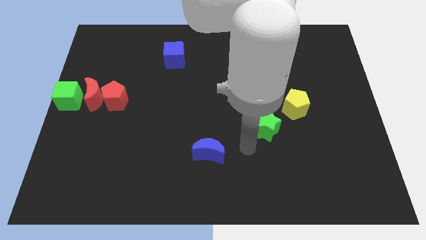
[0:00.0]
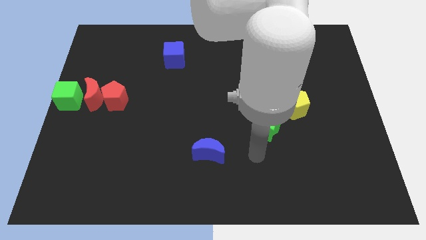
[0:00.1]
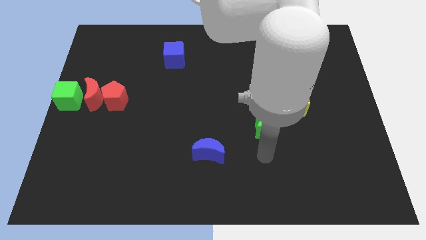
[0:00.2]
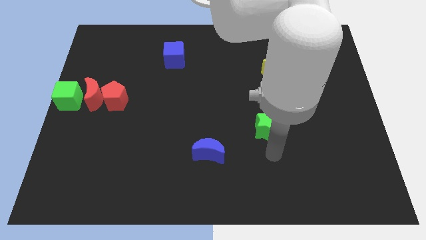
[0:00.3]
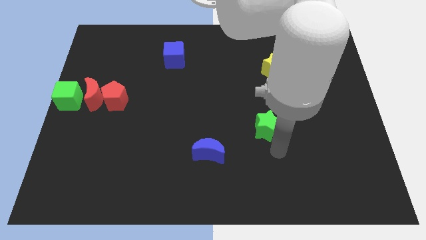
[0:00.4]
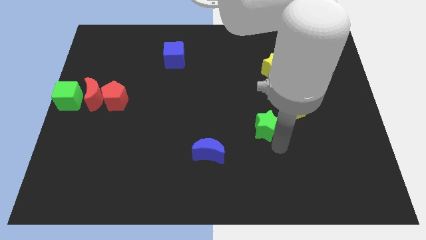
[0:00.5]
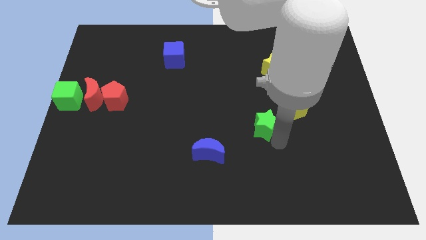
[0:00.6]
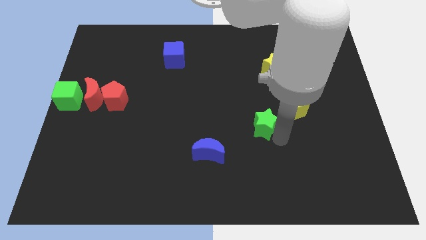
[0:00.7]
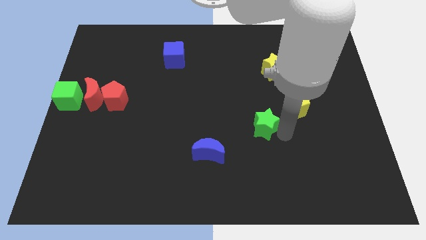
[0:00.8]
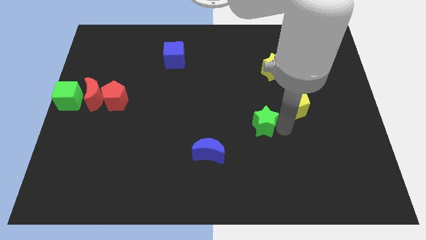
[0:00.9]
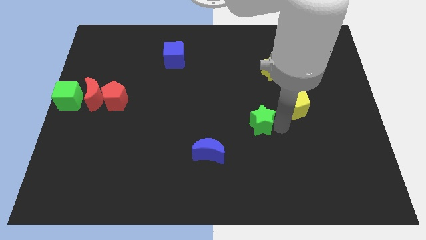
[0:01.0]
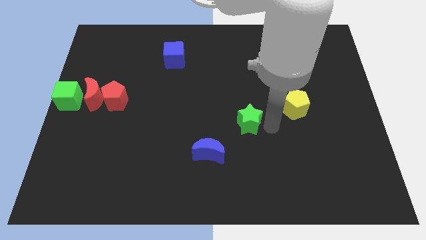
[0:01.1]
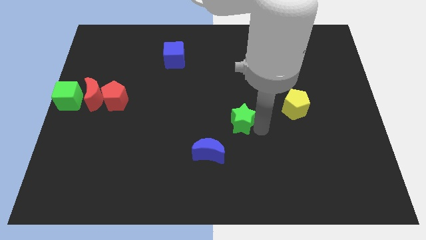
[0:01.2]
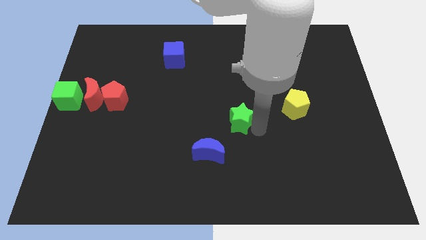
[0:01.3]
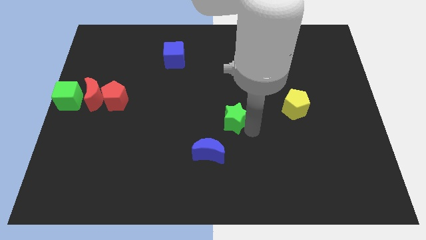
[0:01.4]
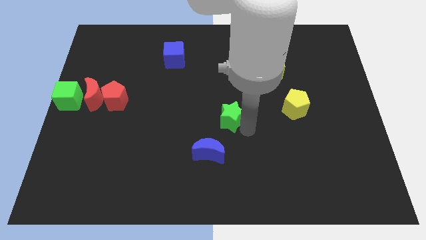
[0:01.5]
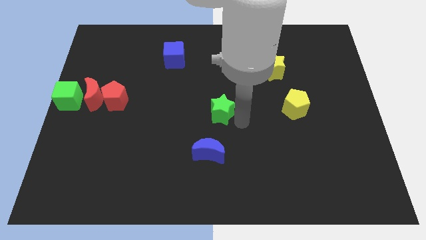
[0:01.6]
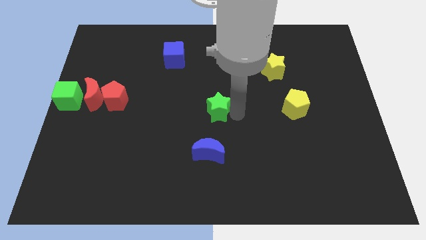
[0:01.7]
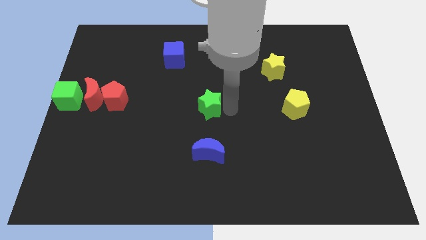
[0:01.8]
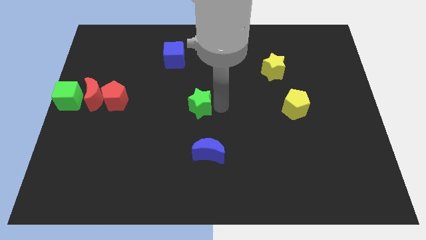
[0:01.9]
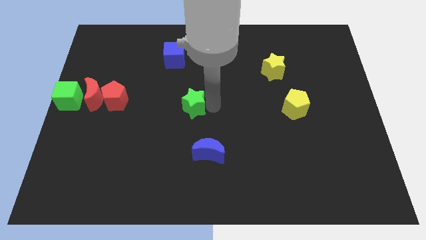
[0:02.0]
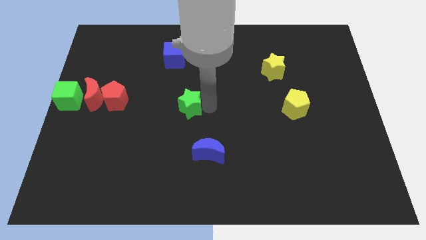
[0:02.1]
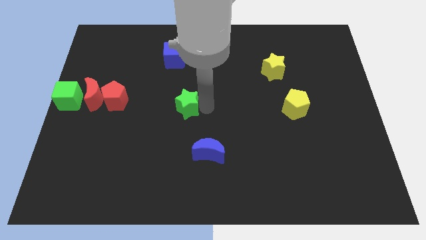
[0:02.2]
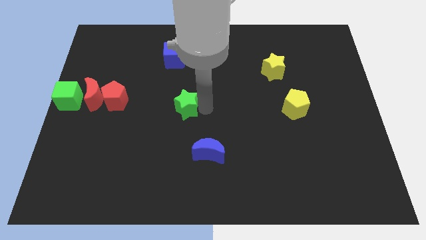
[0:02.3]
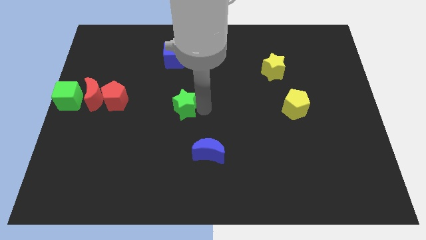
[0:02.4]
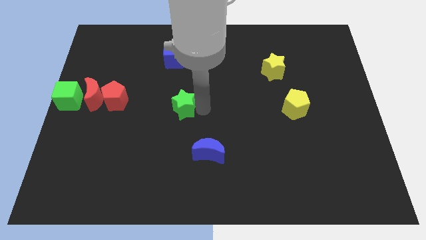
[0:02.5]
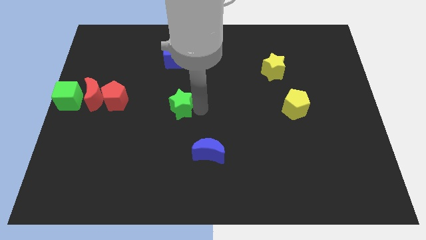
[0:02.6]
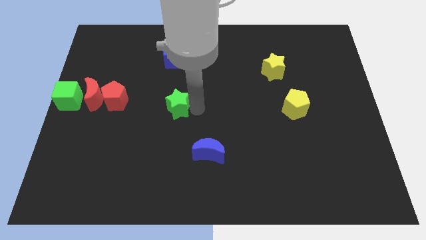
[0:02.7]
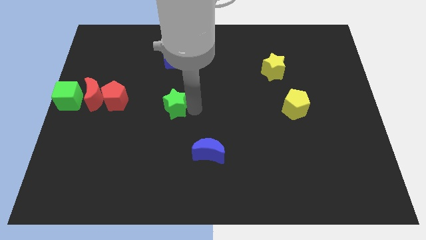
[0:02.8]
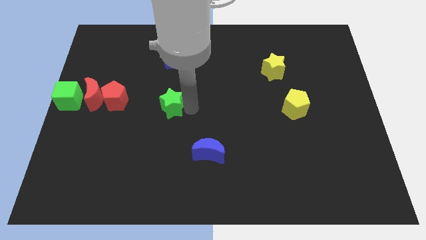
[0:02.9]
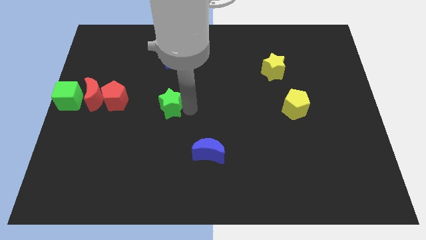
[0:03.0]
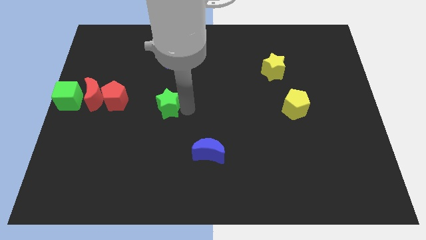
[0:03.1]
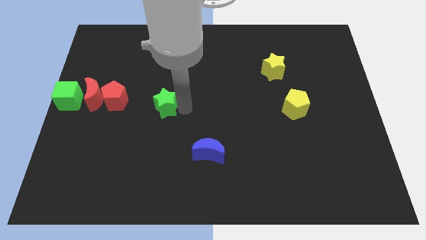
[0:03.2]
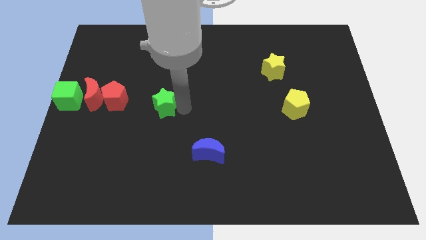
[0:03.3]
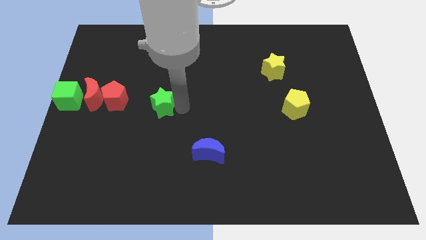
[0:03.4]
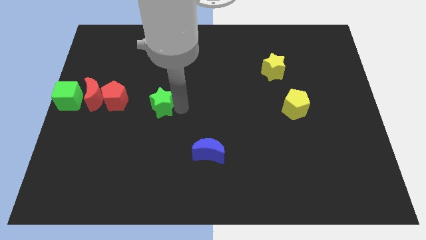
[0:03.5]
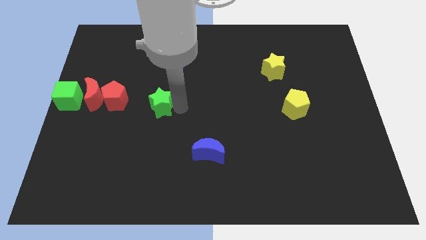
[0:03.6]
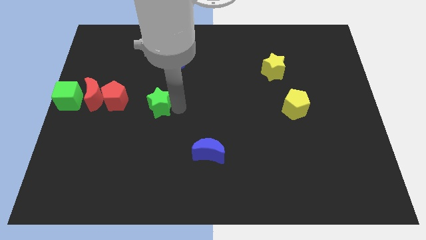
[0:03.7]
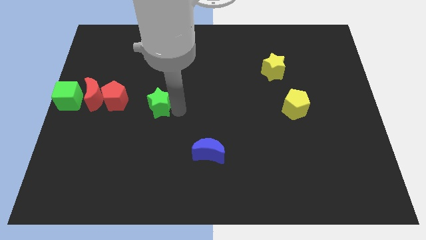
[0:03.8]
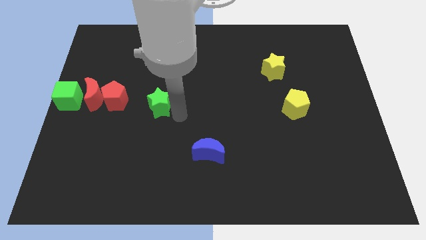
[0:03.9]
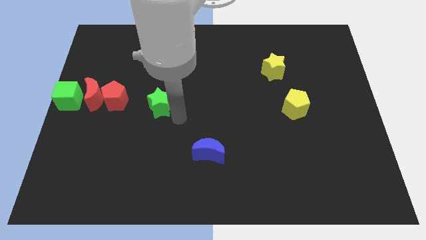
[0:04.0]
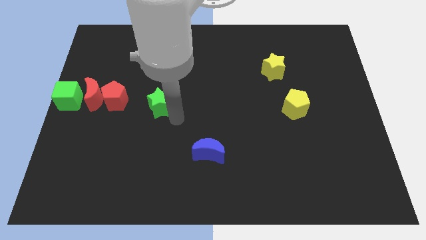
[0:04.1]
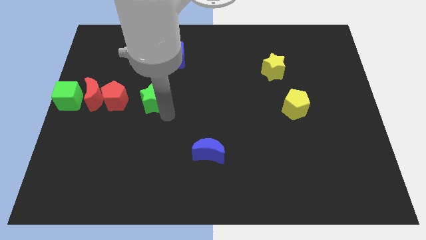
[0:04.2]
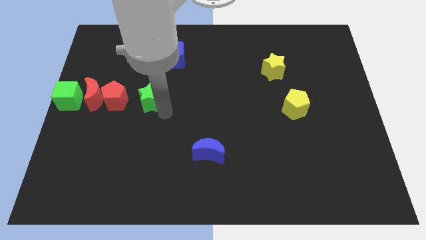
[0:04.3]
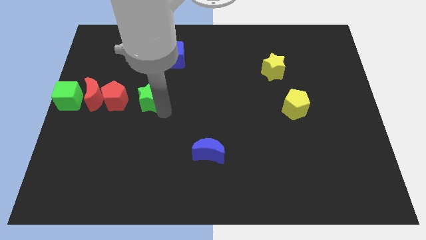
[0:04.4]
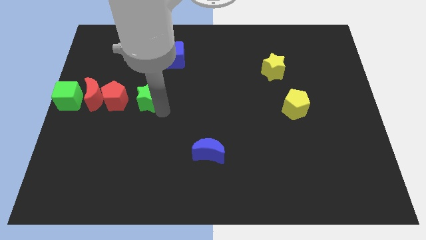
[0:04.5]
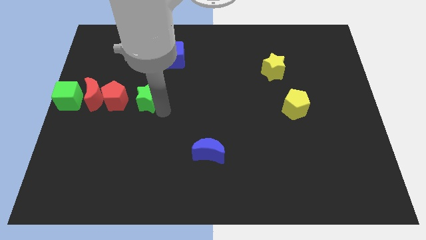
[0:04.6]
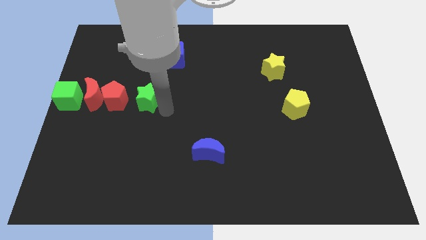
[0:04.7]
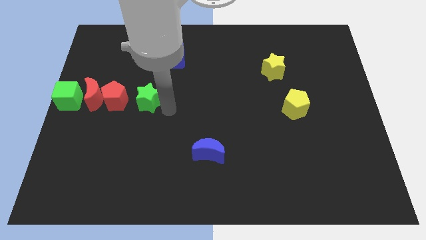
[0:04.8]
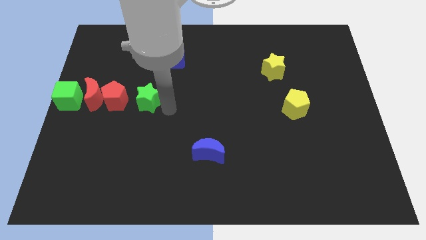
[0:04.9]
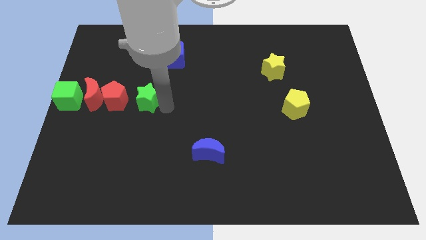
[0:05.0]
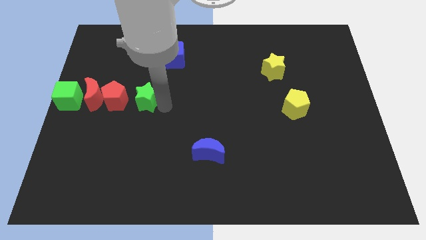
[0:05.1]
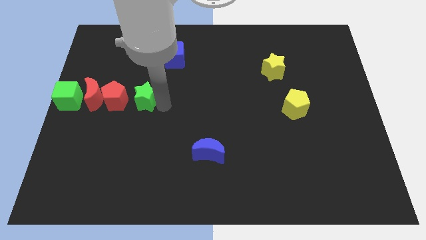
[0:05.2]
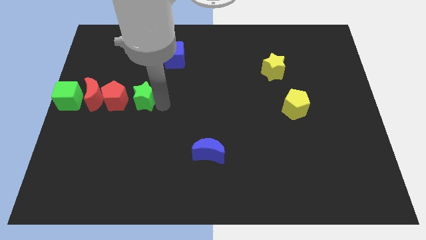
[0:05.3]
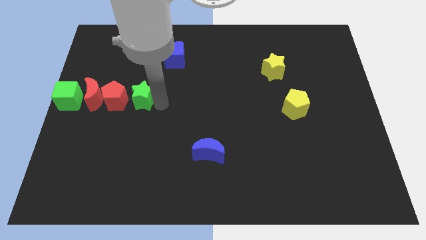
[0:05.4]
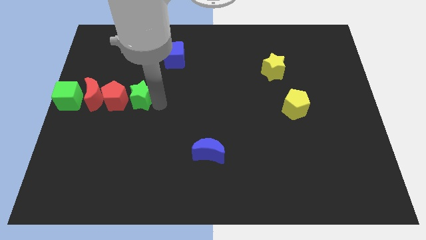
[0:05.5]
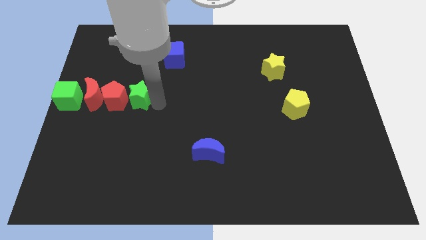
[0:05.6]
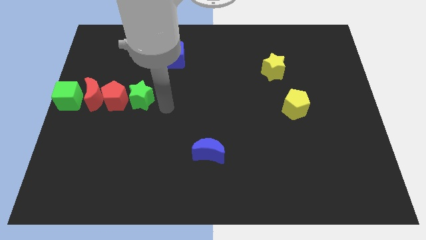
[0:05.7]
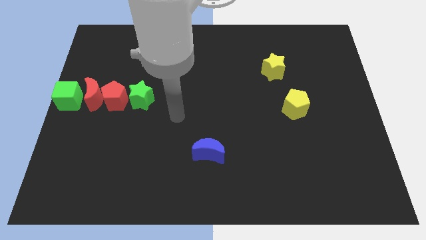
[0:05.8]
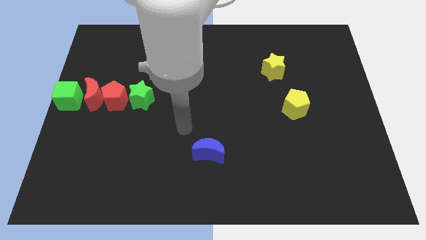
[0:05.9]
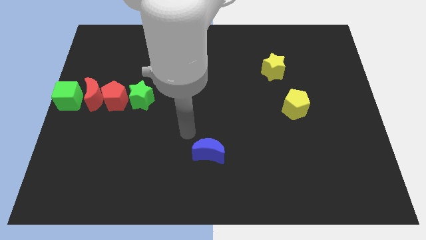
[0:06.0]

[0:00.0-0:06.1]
move the green star right beside the red pentagon

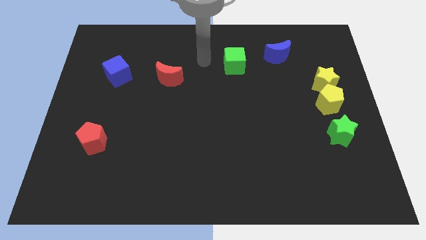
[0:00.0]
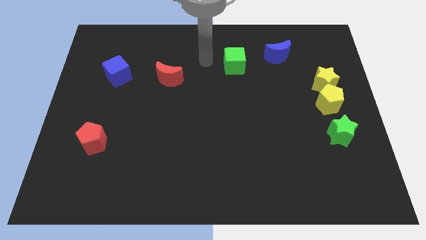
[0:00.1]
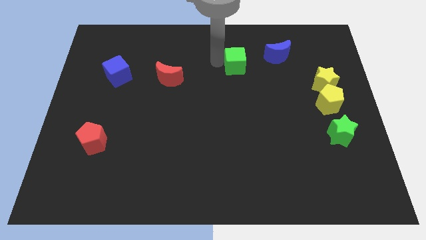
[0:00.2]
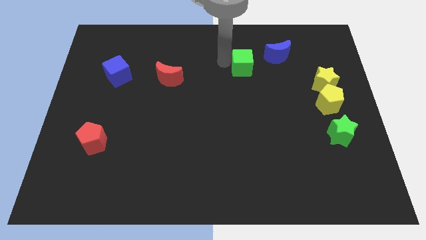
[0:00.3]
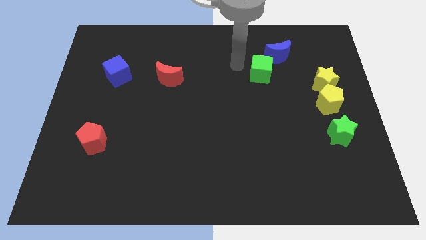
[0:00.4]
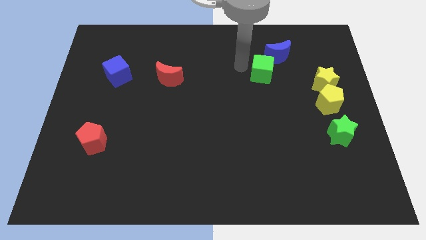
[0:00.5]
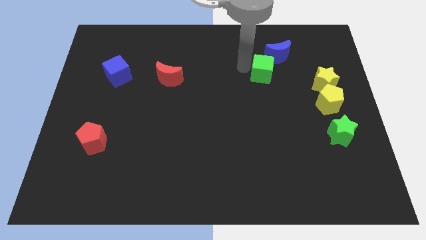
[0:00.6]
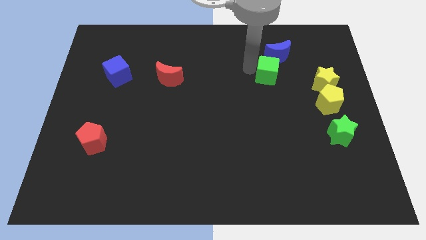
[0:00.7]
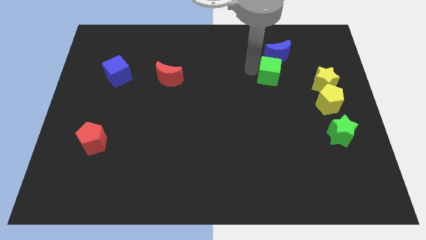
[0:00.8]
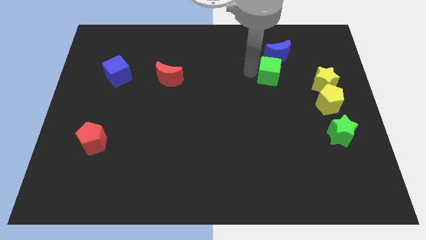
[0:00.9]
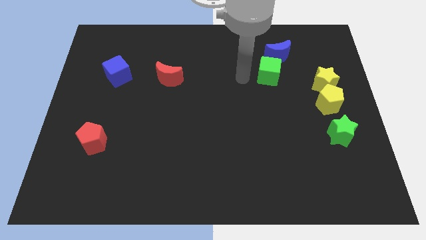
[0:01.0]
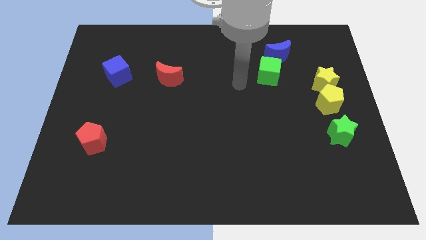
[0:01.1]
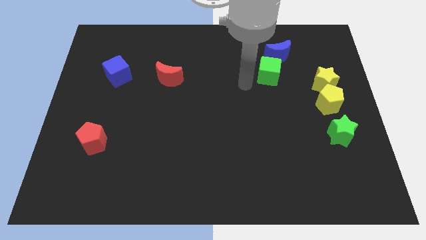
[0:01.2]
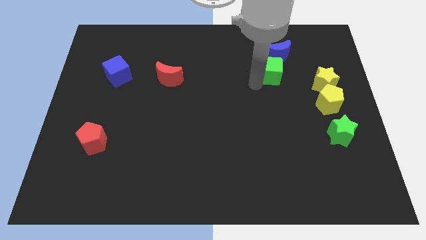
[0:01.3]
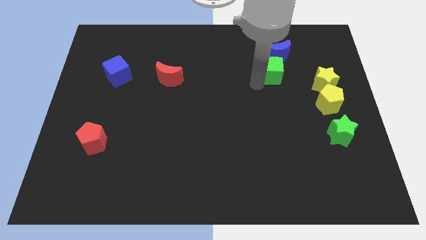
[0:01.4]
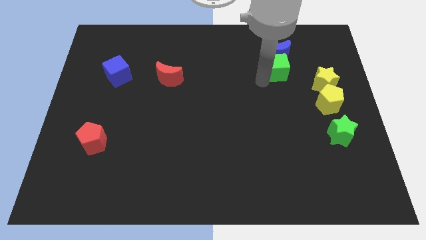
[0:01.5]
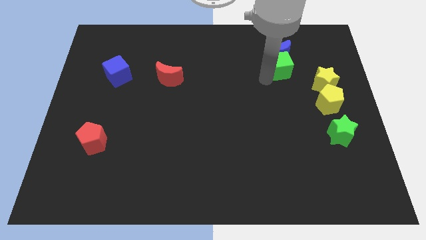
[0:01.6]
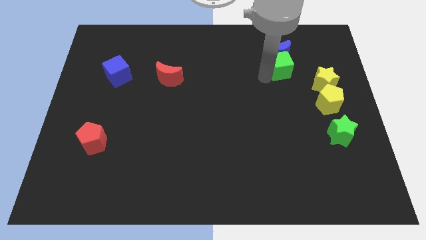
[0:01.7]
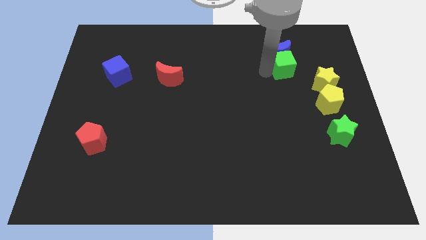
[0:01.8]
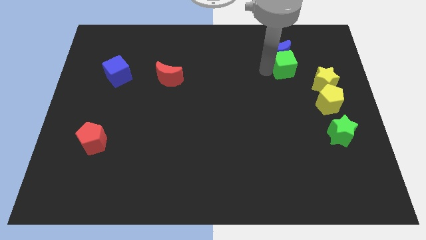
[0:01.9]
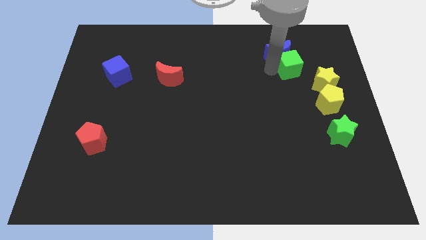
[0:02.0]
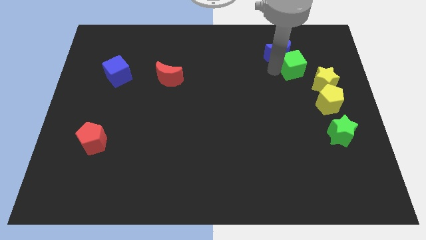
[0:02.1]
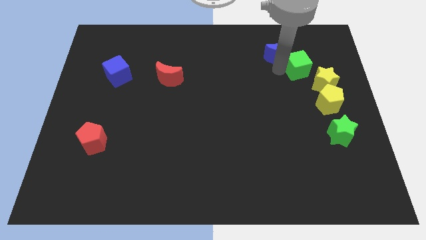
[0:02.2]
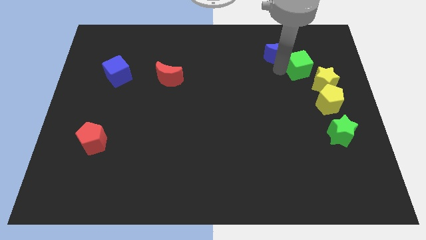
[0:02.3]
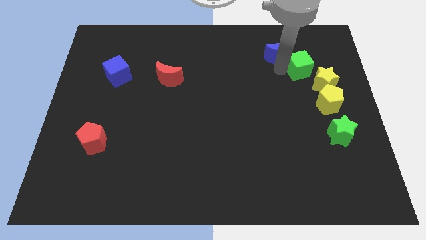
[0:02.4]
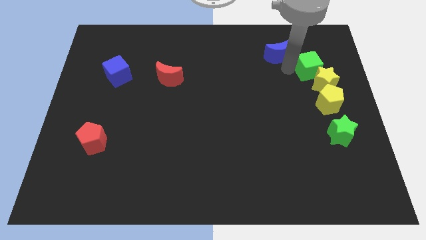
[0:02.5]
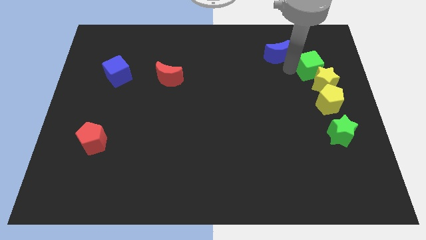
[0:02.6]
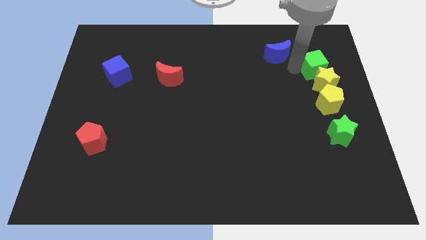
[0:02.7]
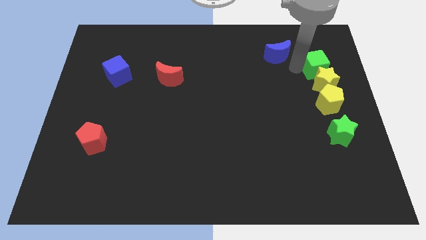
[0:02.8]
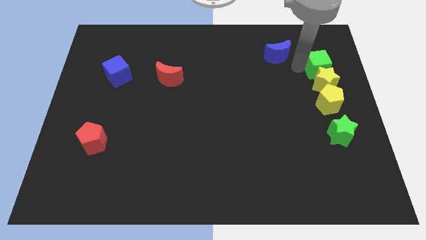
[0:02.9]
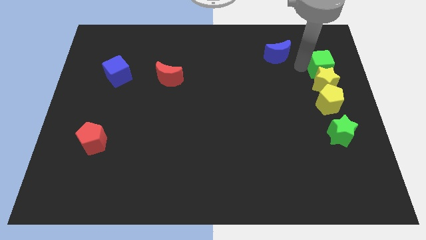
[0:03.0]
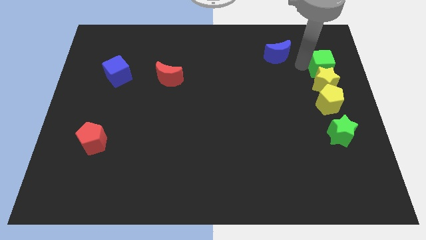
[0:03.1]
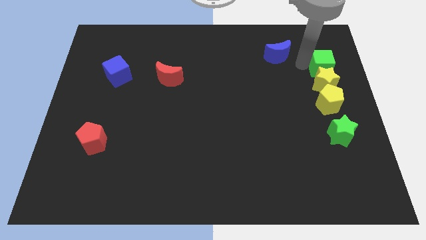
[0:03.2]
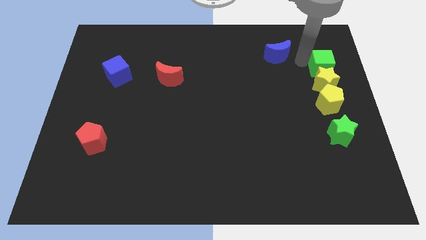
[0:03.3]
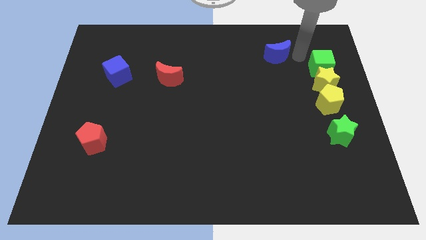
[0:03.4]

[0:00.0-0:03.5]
push green cube above the yellow star so that four blocks make a line
